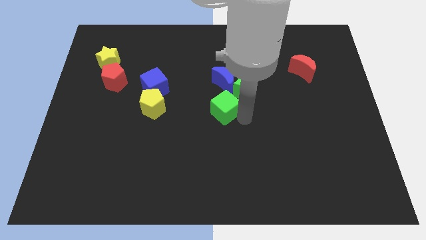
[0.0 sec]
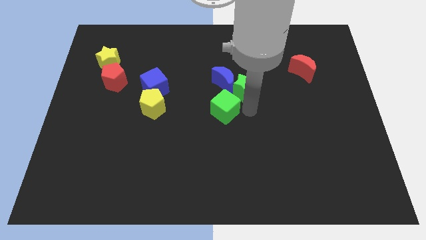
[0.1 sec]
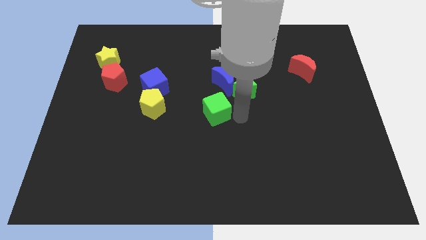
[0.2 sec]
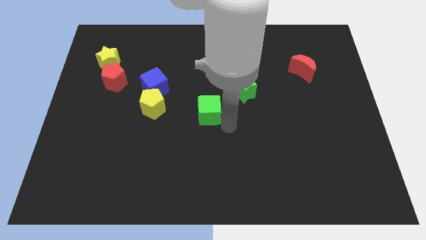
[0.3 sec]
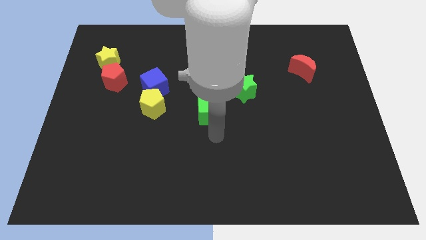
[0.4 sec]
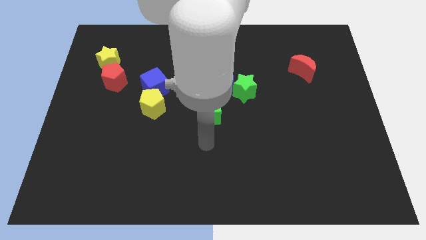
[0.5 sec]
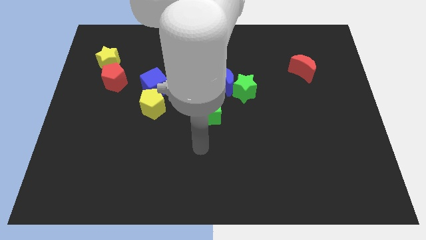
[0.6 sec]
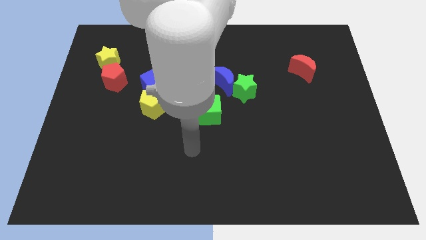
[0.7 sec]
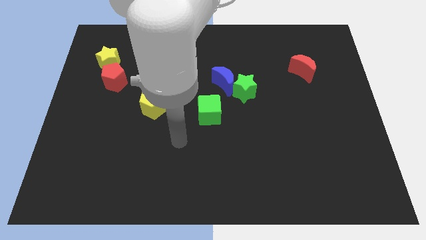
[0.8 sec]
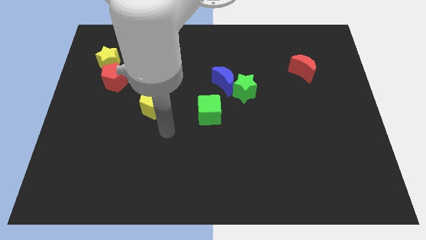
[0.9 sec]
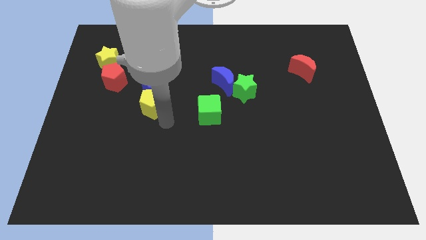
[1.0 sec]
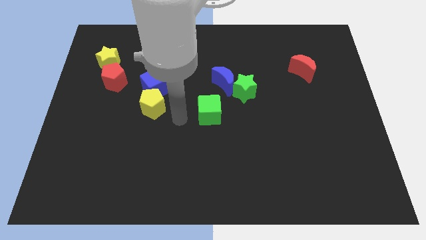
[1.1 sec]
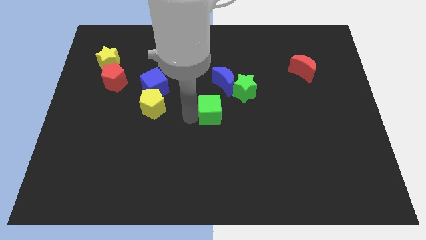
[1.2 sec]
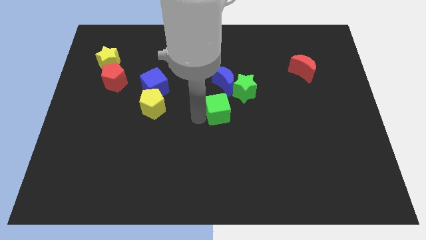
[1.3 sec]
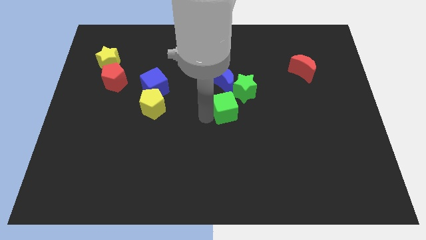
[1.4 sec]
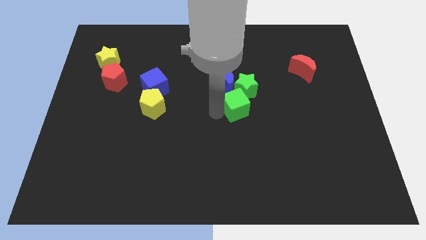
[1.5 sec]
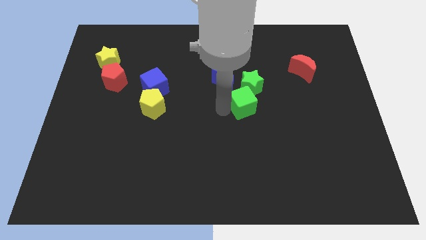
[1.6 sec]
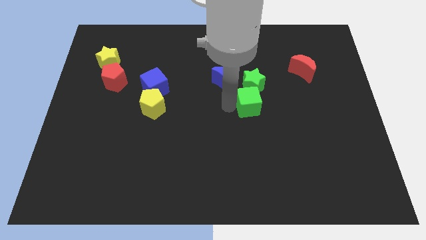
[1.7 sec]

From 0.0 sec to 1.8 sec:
move the green cube into the green star

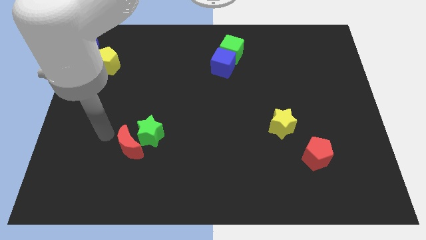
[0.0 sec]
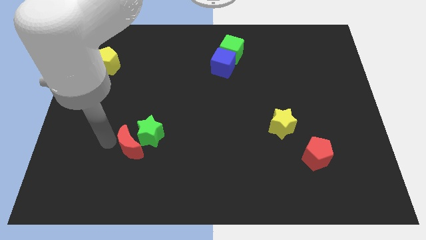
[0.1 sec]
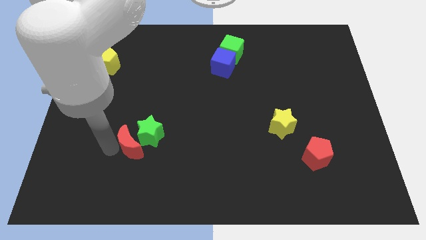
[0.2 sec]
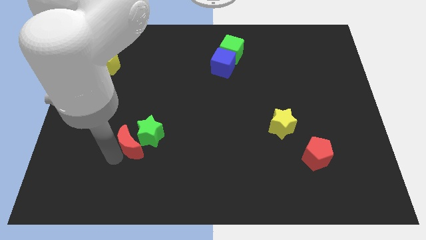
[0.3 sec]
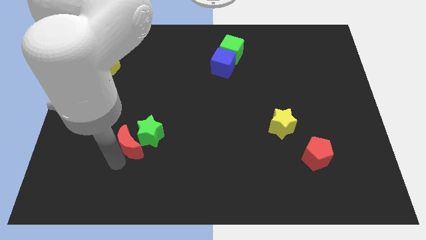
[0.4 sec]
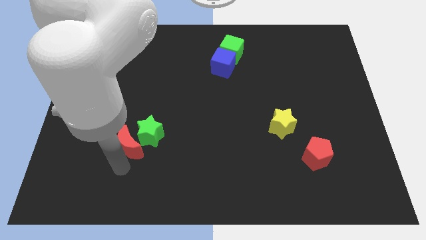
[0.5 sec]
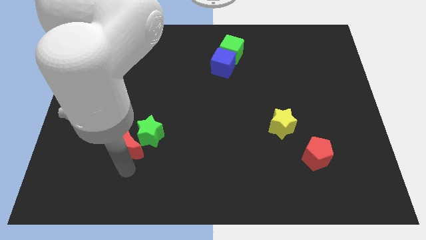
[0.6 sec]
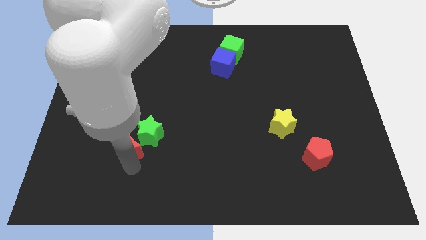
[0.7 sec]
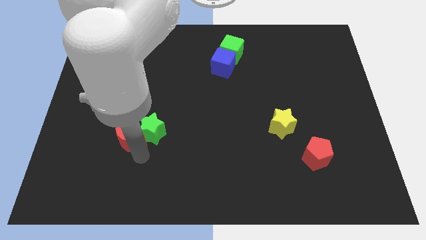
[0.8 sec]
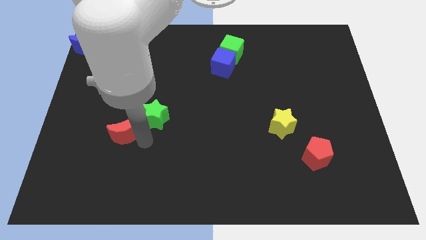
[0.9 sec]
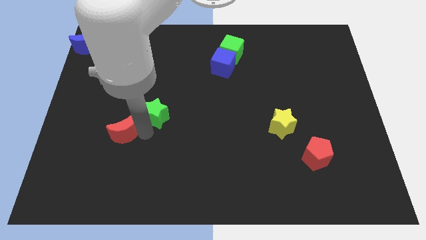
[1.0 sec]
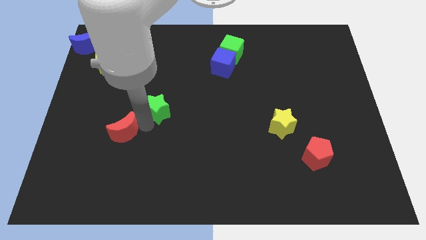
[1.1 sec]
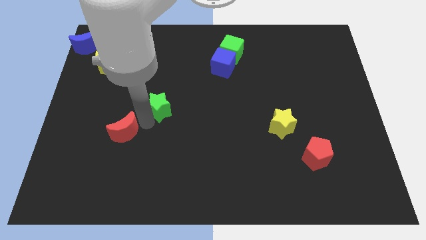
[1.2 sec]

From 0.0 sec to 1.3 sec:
separate the green star and red crescent from each other

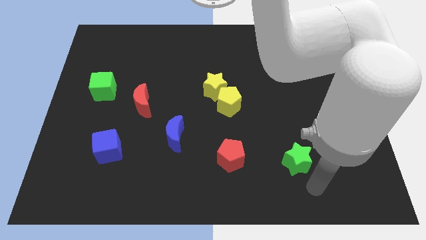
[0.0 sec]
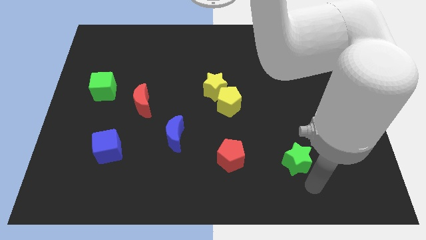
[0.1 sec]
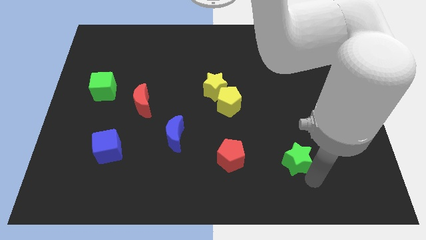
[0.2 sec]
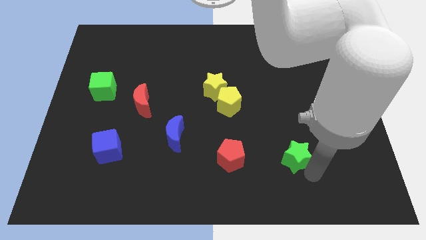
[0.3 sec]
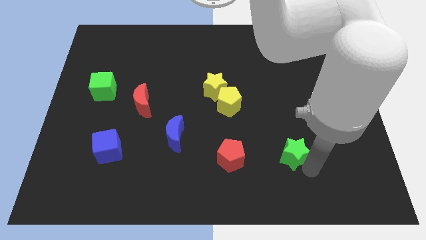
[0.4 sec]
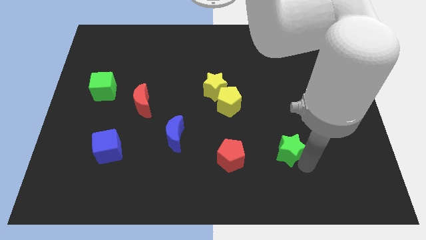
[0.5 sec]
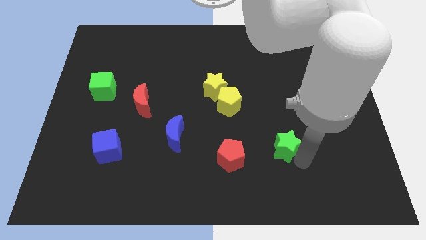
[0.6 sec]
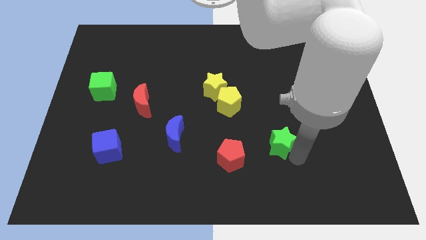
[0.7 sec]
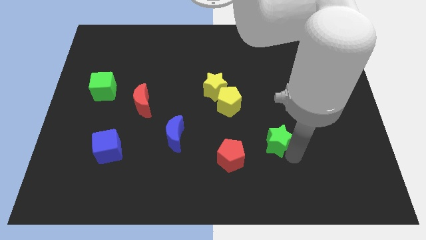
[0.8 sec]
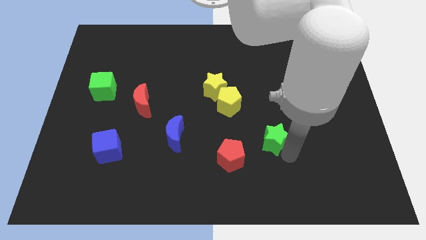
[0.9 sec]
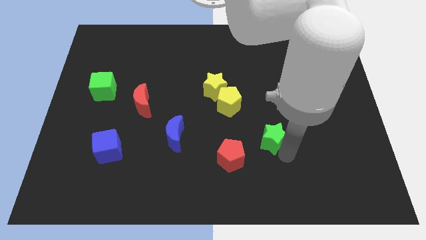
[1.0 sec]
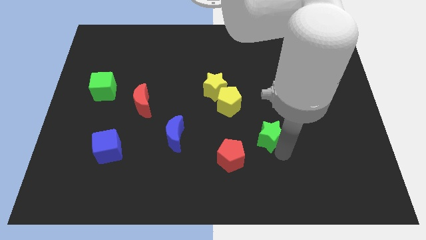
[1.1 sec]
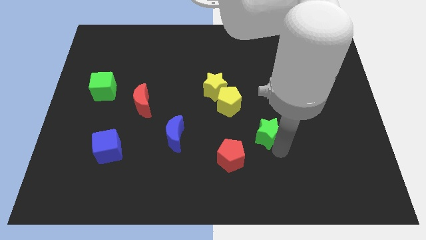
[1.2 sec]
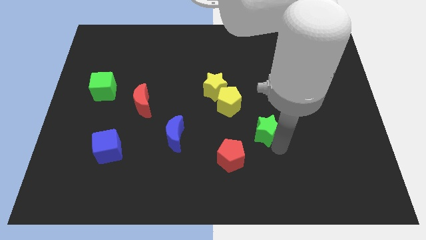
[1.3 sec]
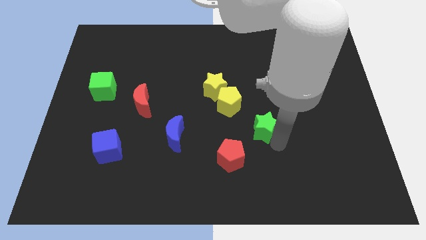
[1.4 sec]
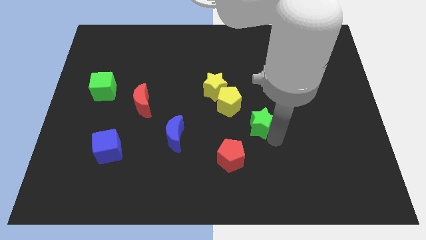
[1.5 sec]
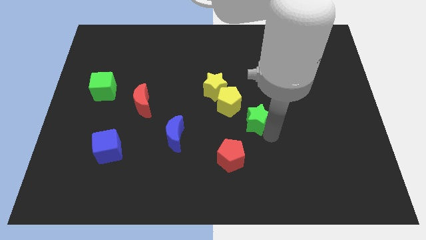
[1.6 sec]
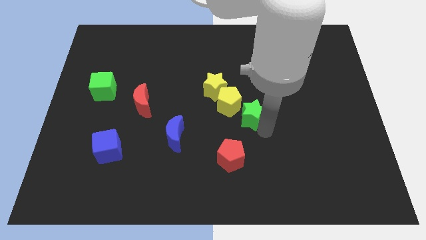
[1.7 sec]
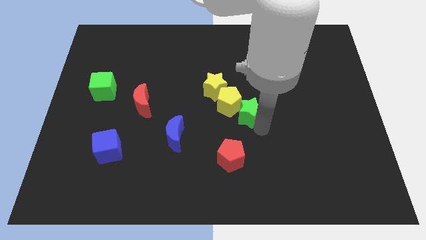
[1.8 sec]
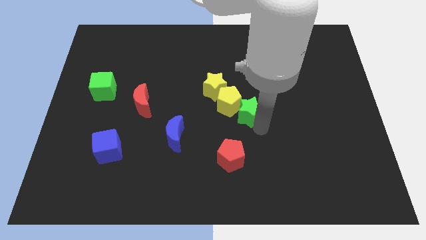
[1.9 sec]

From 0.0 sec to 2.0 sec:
push the green star diagonal below yellow pentagon

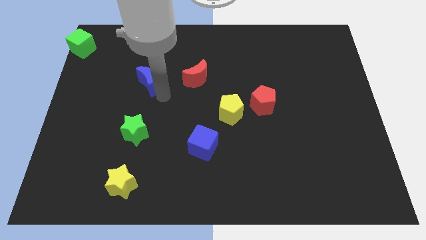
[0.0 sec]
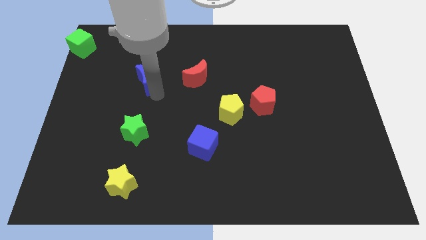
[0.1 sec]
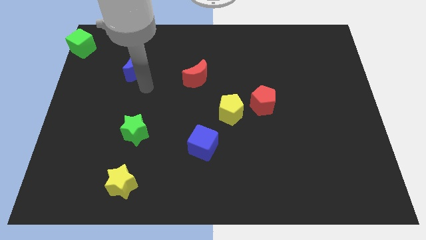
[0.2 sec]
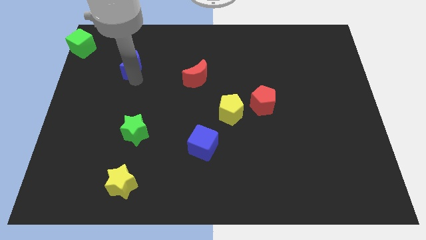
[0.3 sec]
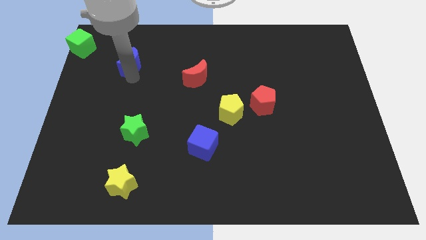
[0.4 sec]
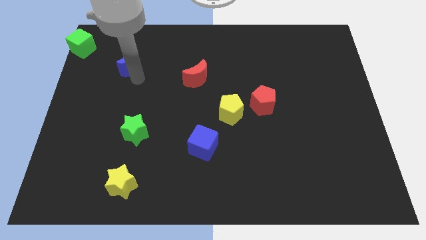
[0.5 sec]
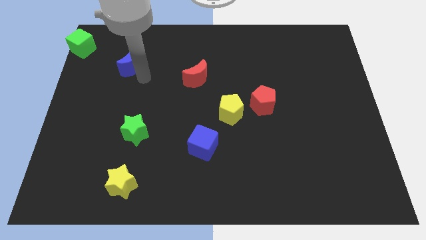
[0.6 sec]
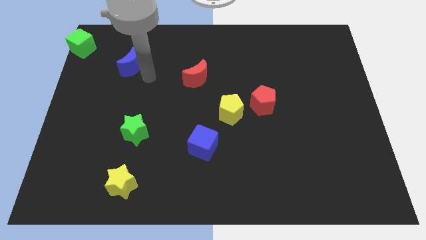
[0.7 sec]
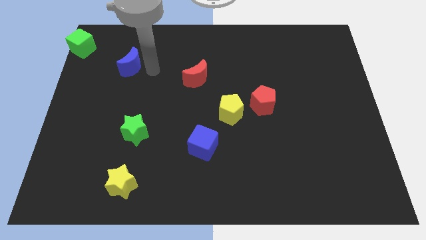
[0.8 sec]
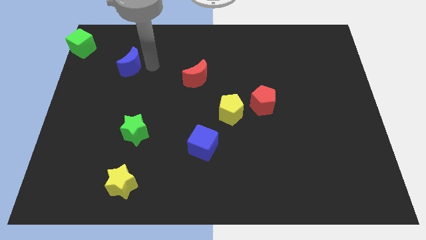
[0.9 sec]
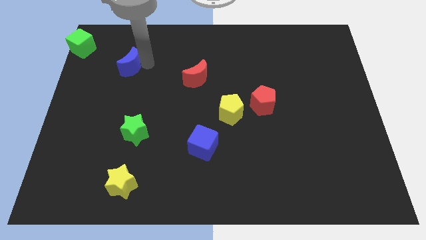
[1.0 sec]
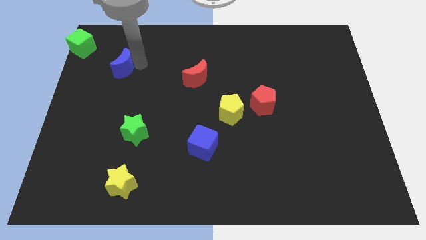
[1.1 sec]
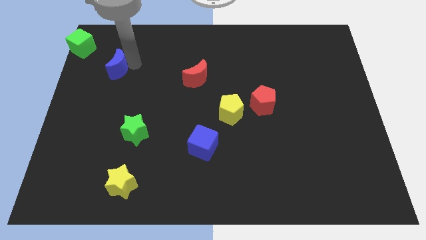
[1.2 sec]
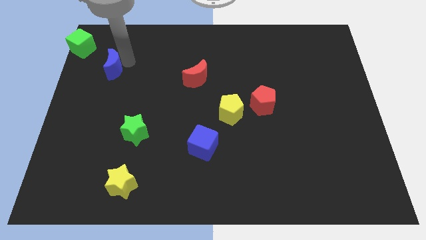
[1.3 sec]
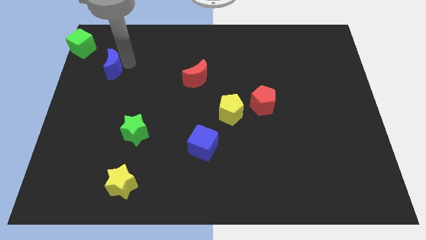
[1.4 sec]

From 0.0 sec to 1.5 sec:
place the blue crescent below green cube

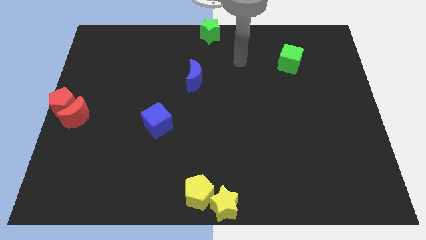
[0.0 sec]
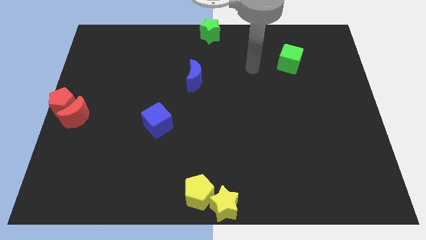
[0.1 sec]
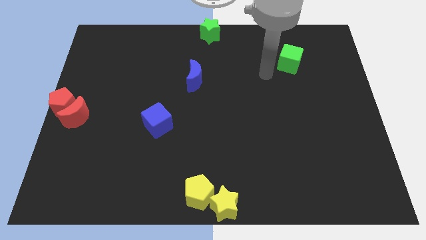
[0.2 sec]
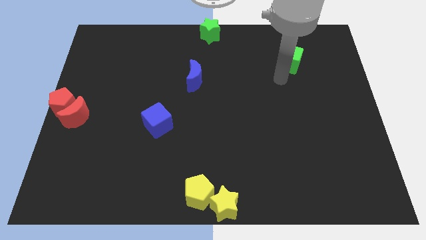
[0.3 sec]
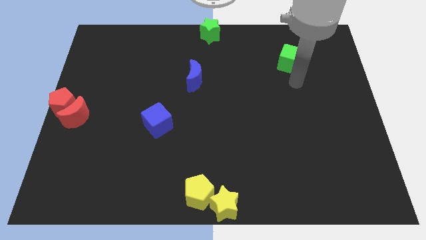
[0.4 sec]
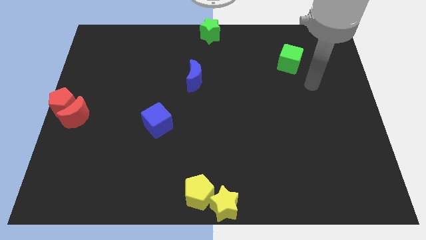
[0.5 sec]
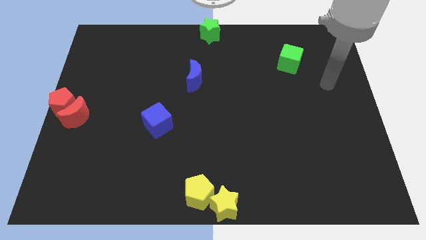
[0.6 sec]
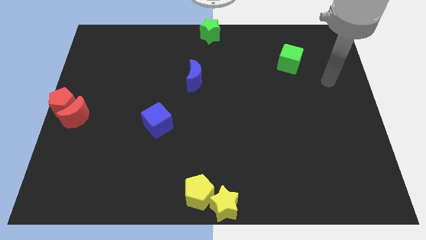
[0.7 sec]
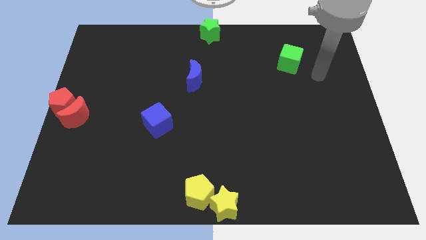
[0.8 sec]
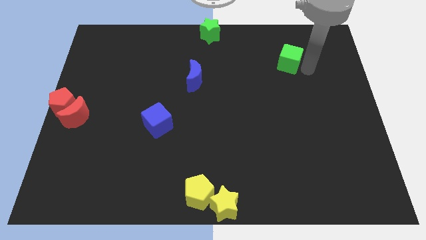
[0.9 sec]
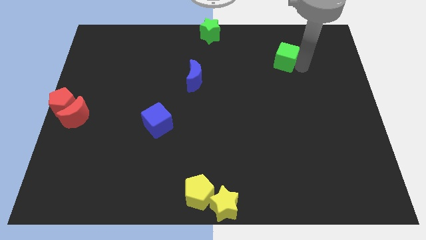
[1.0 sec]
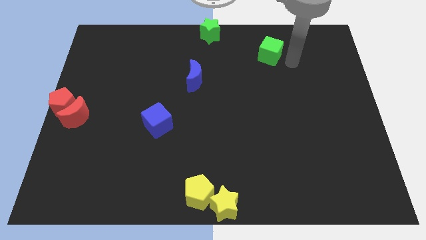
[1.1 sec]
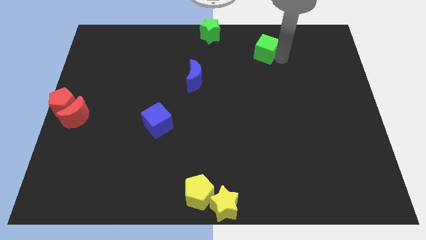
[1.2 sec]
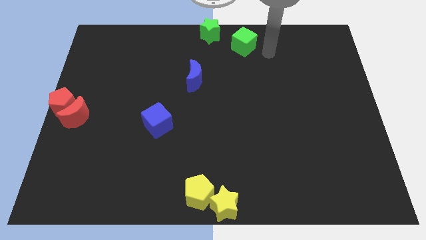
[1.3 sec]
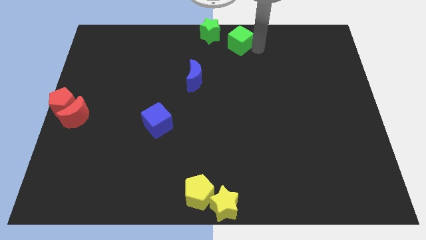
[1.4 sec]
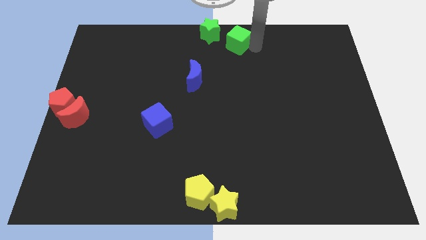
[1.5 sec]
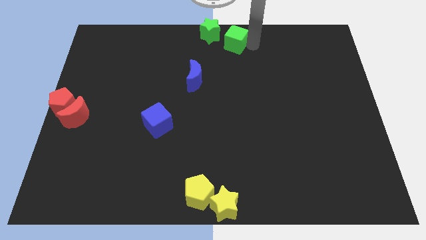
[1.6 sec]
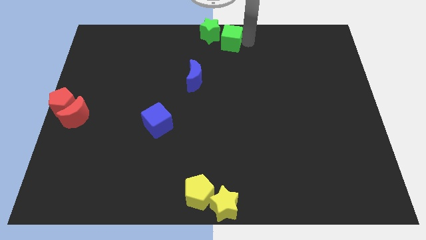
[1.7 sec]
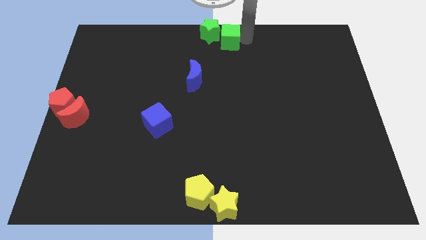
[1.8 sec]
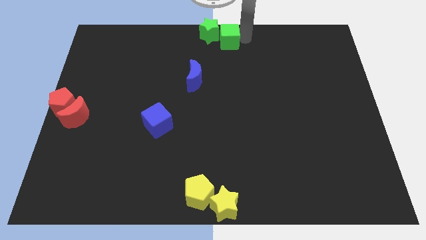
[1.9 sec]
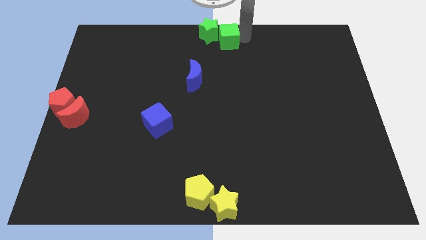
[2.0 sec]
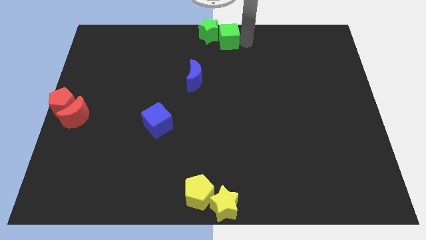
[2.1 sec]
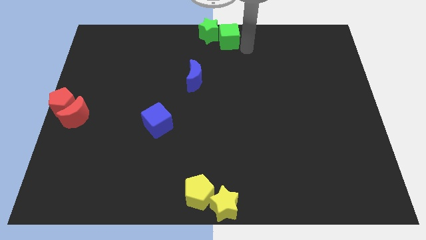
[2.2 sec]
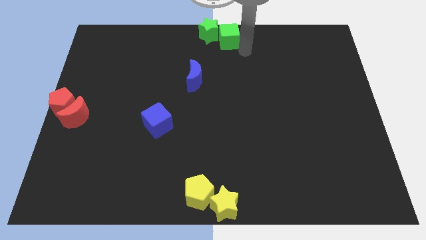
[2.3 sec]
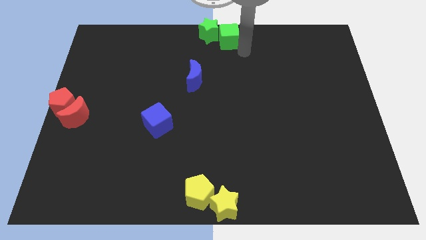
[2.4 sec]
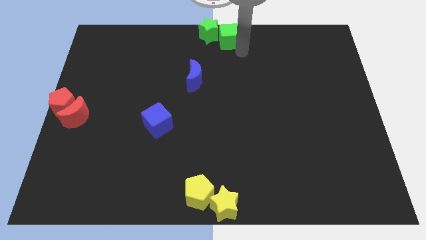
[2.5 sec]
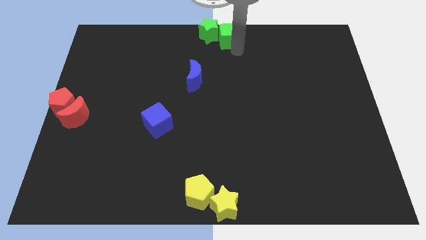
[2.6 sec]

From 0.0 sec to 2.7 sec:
move the green cube into the top center of the board
